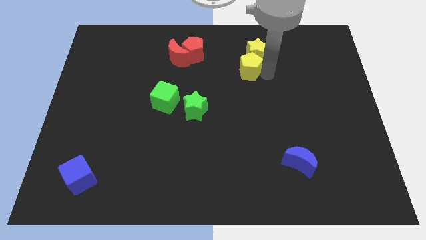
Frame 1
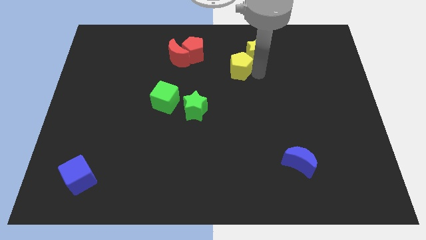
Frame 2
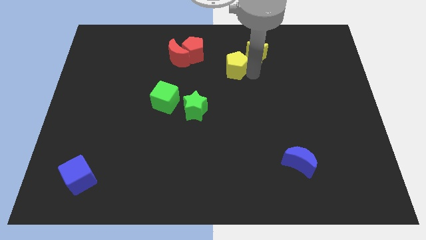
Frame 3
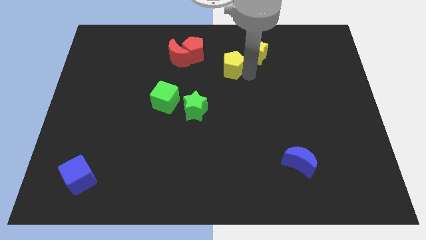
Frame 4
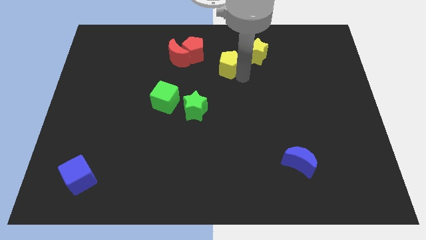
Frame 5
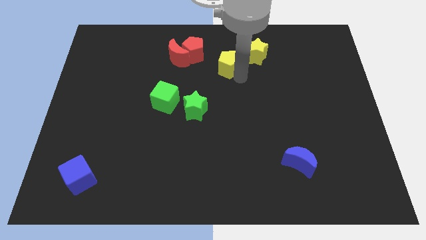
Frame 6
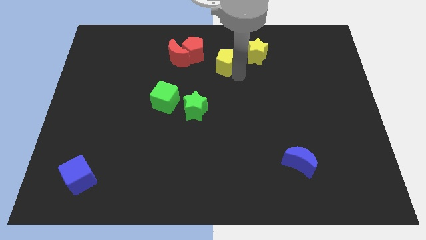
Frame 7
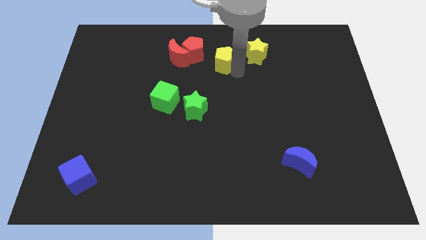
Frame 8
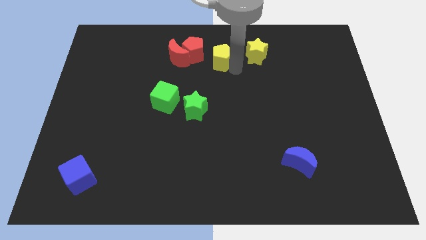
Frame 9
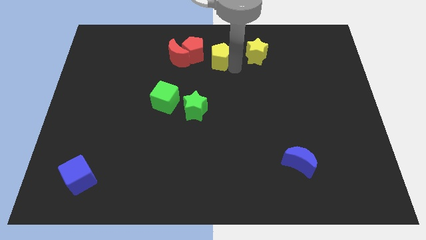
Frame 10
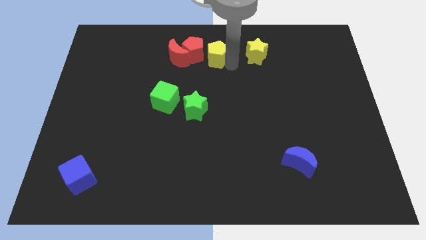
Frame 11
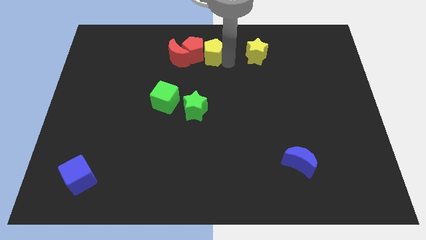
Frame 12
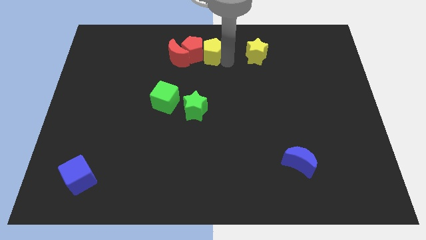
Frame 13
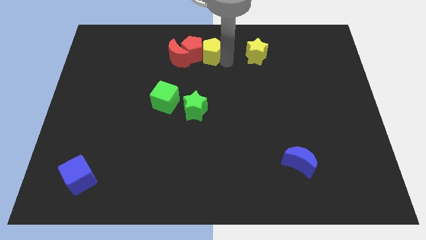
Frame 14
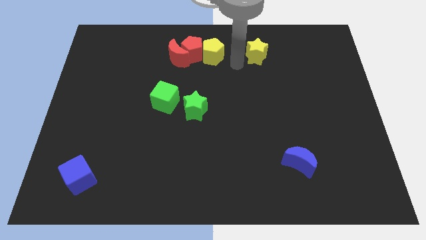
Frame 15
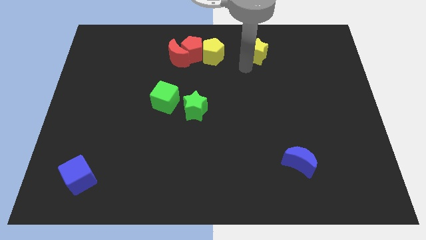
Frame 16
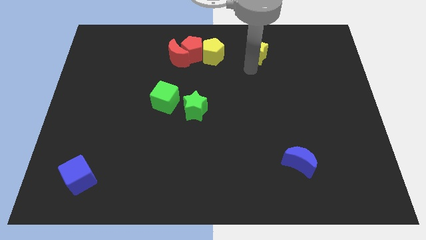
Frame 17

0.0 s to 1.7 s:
push yellow pentagon to the right of red pentagon

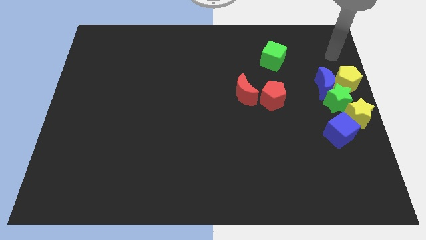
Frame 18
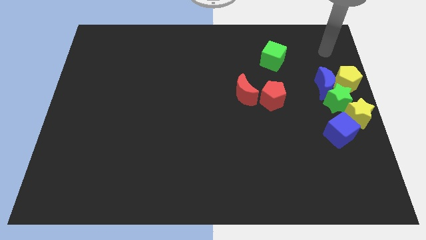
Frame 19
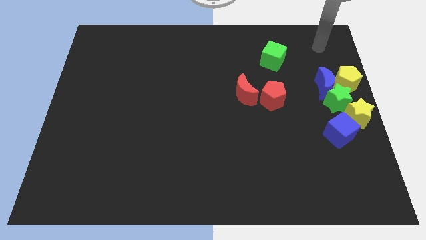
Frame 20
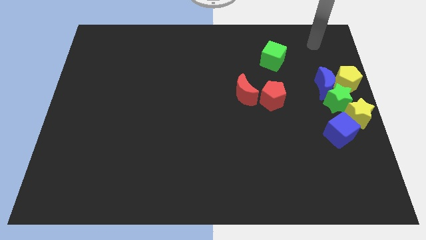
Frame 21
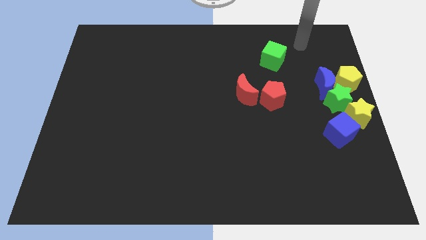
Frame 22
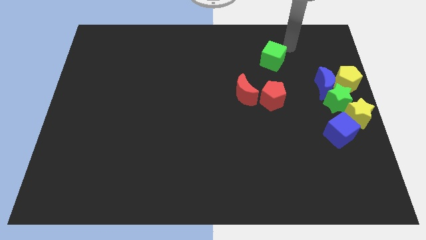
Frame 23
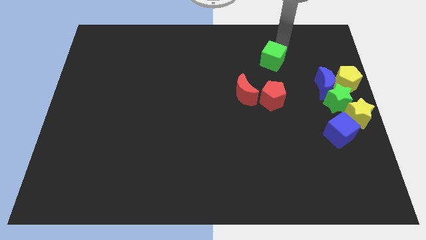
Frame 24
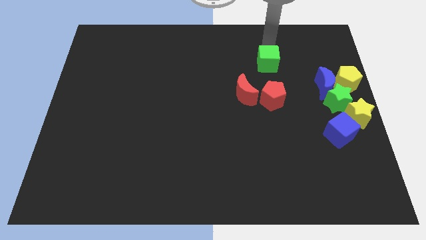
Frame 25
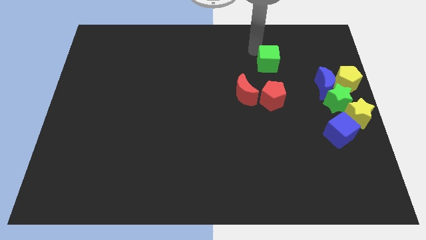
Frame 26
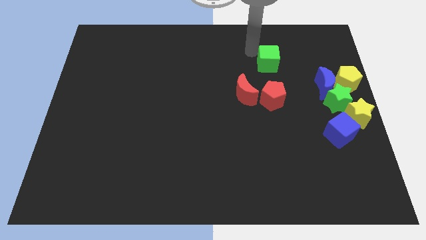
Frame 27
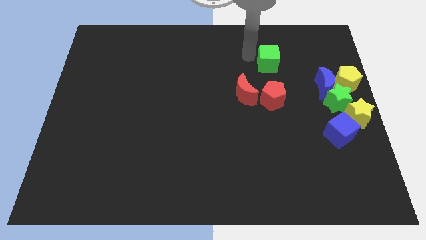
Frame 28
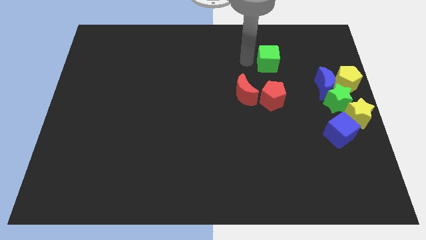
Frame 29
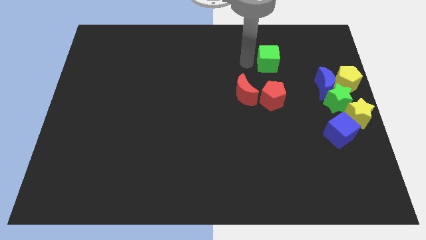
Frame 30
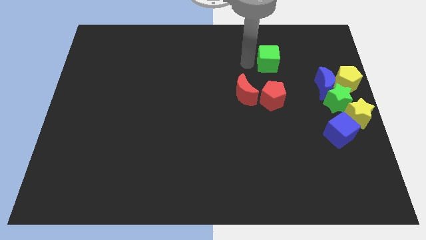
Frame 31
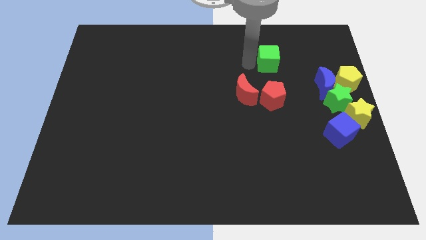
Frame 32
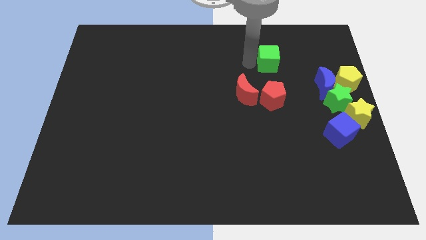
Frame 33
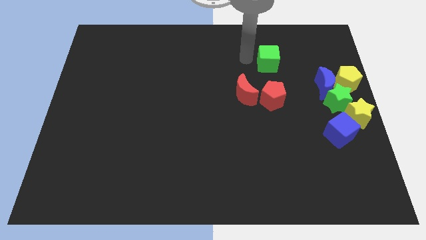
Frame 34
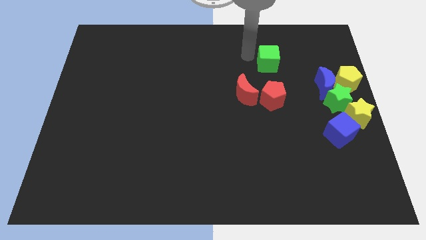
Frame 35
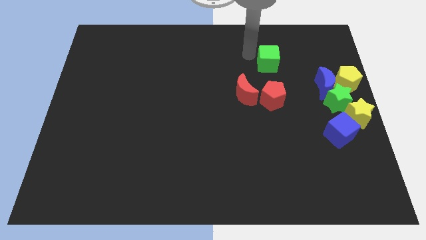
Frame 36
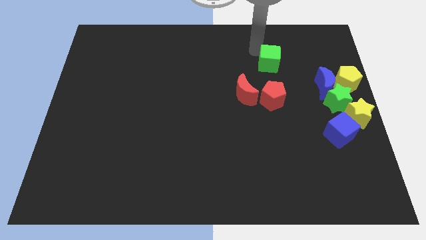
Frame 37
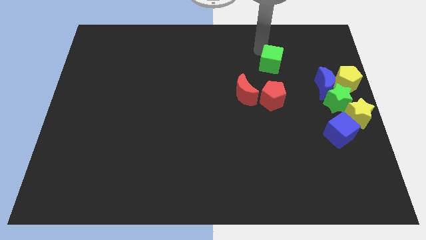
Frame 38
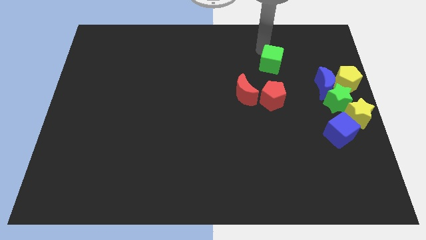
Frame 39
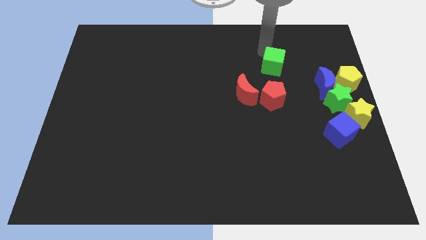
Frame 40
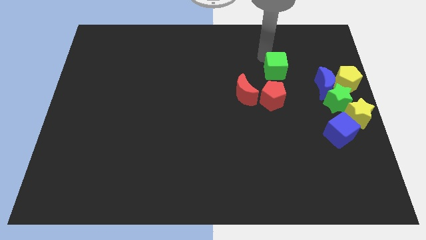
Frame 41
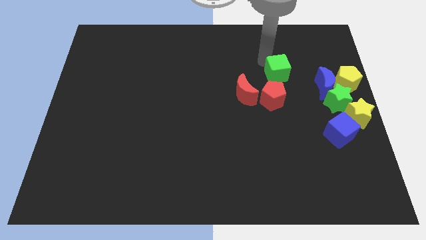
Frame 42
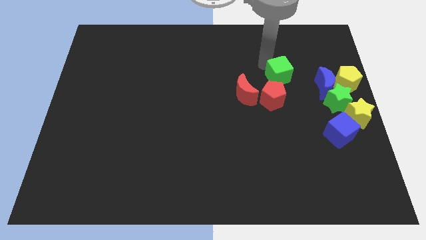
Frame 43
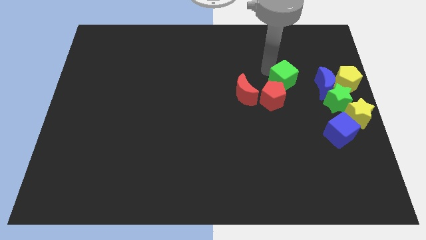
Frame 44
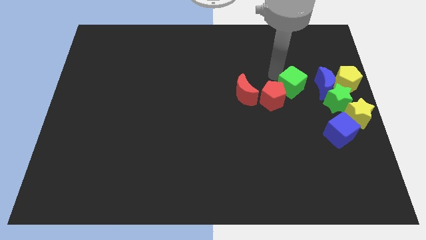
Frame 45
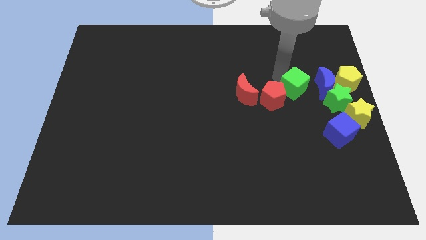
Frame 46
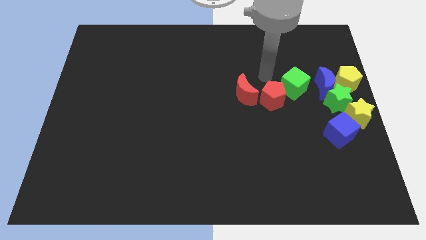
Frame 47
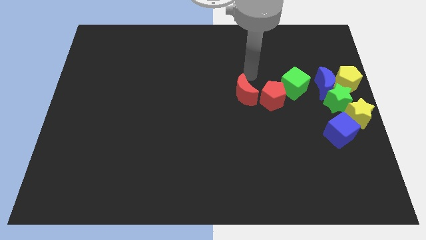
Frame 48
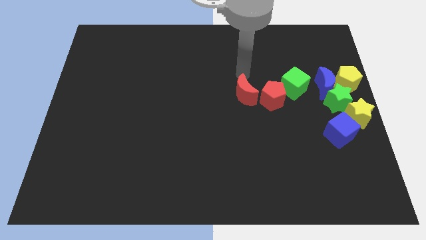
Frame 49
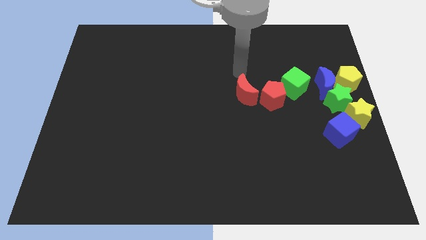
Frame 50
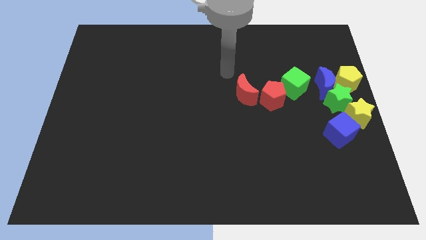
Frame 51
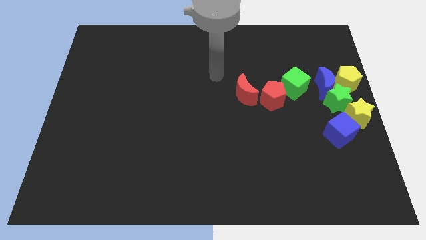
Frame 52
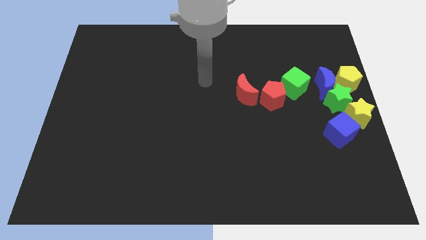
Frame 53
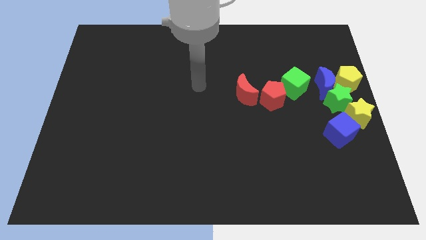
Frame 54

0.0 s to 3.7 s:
push the green star to the right of the red pentagon

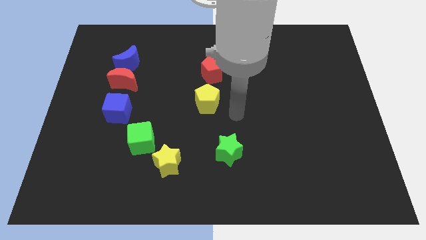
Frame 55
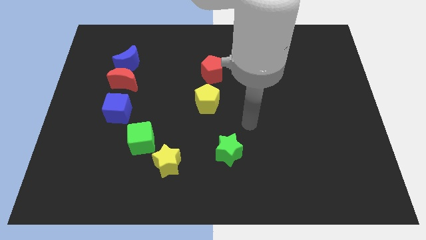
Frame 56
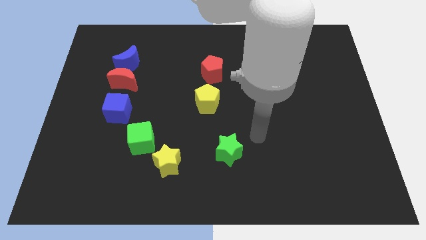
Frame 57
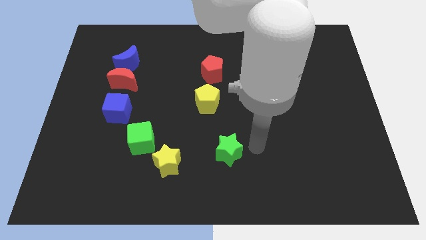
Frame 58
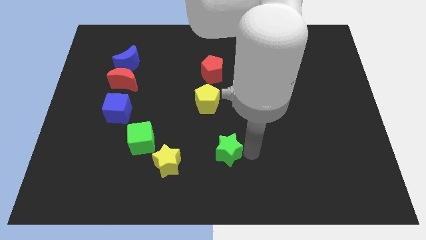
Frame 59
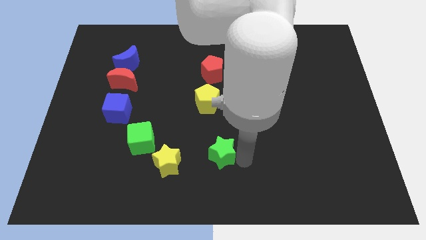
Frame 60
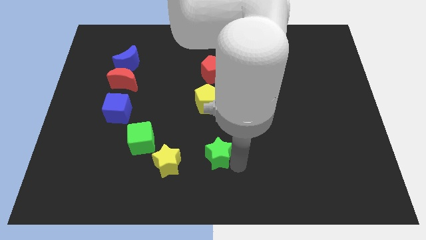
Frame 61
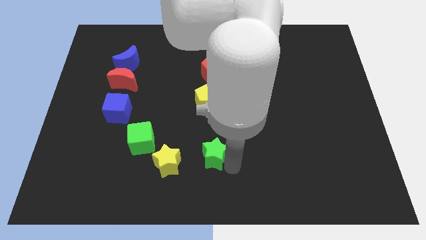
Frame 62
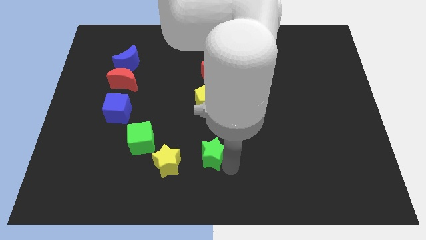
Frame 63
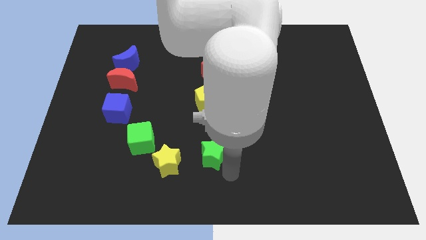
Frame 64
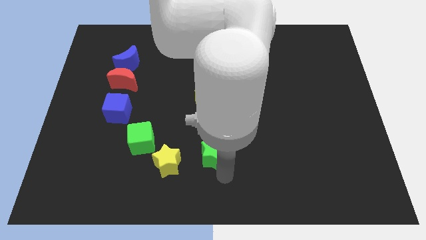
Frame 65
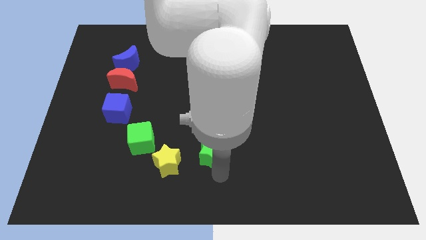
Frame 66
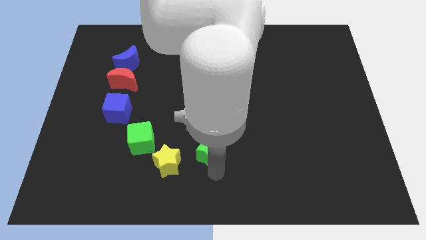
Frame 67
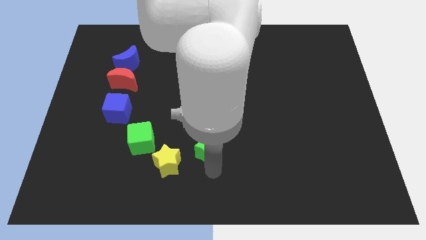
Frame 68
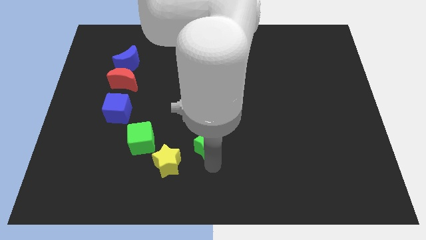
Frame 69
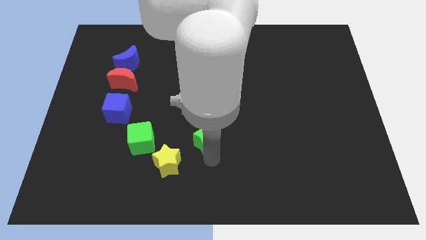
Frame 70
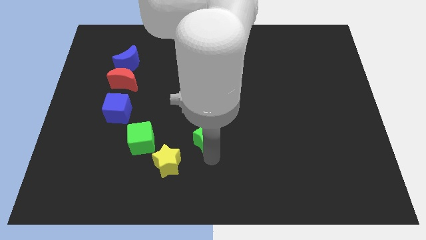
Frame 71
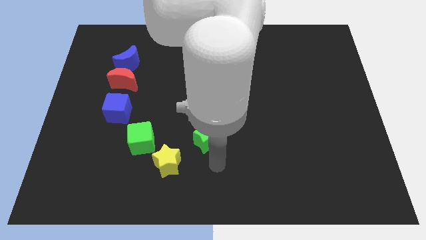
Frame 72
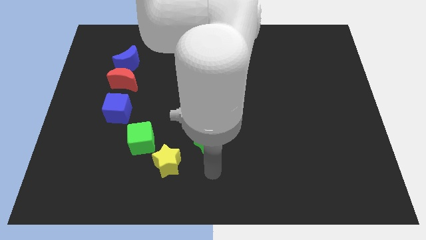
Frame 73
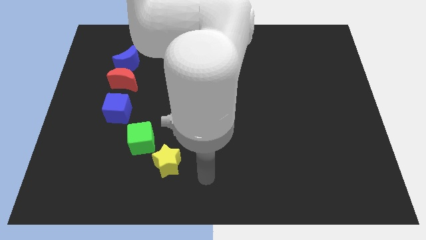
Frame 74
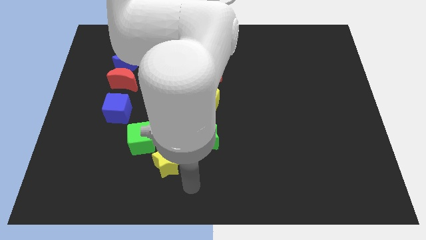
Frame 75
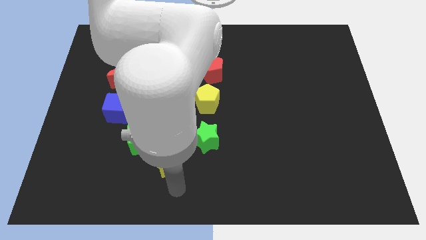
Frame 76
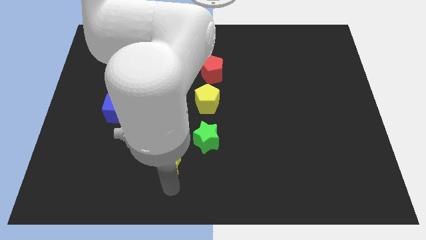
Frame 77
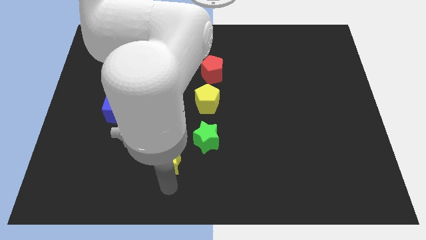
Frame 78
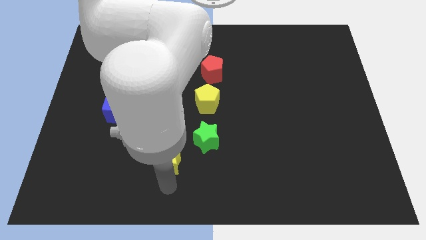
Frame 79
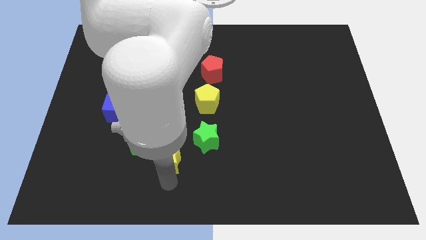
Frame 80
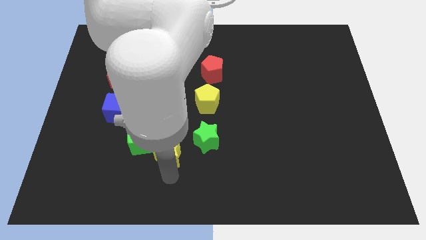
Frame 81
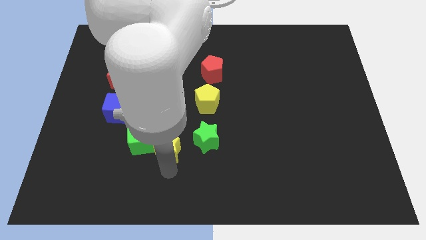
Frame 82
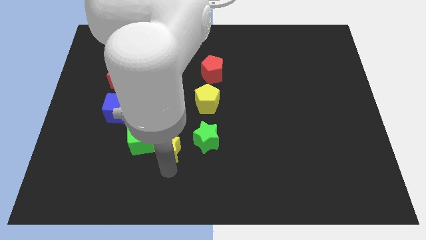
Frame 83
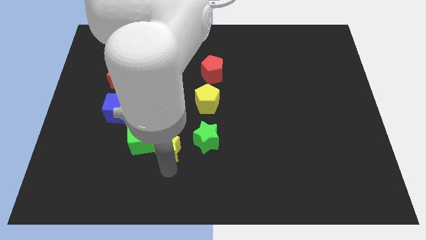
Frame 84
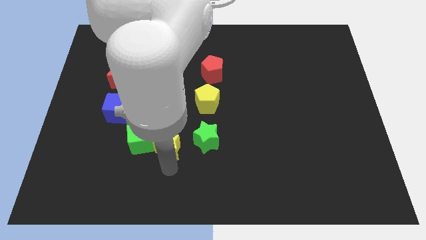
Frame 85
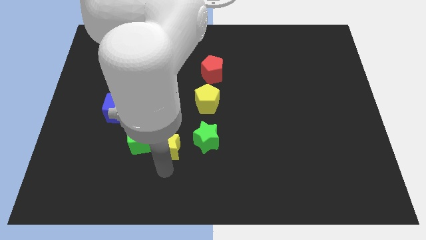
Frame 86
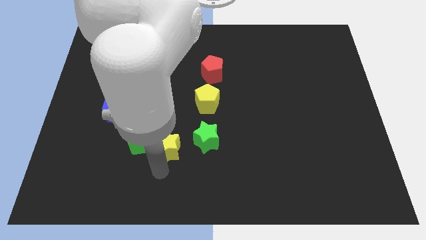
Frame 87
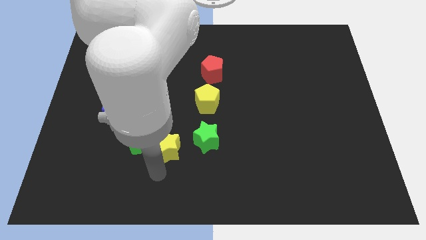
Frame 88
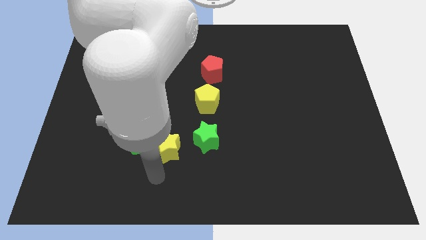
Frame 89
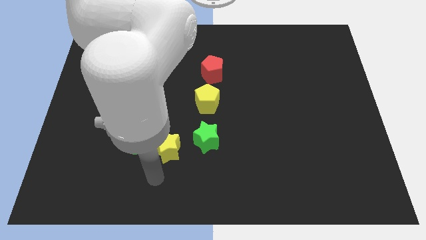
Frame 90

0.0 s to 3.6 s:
push green star and yellow star upwards
